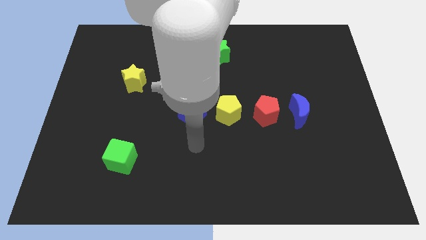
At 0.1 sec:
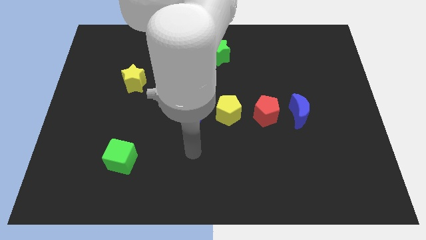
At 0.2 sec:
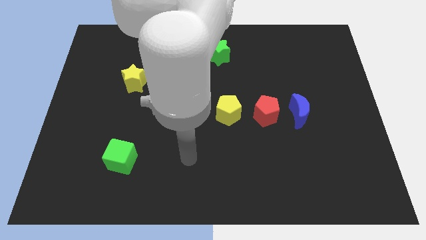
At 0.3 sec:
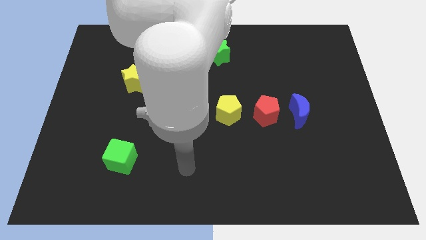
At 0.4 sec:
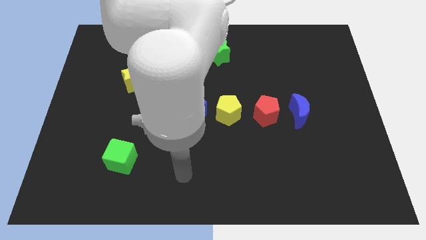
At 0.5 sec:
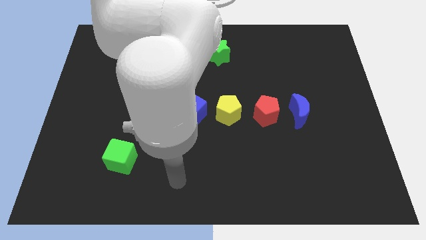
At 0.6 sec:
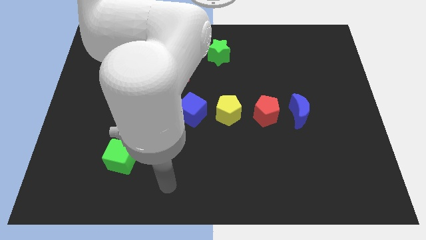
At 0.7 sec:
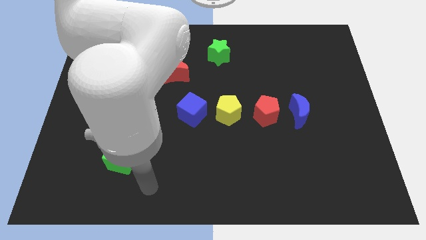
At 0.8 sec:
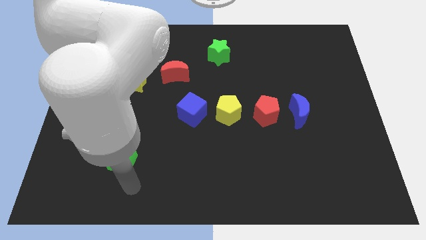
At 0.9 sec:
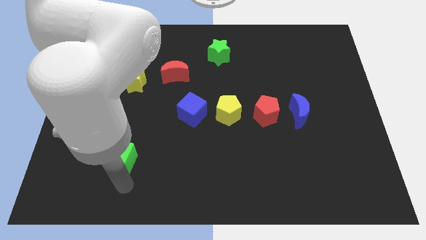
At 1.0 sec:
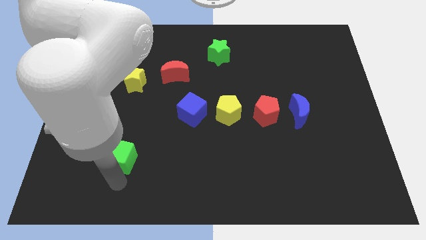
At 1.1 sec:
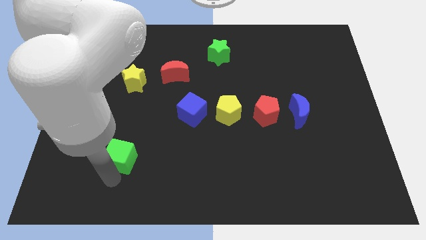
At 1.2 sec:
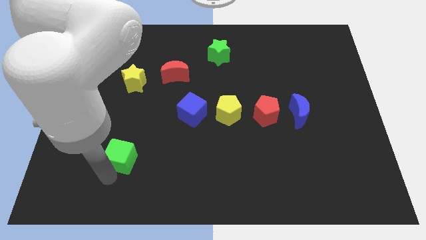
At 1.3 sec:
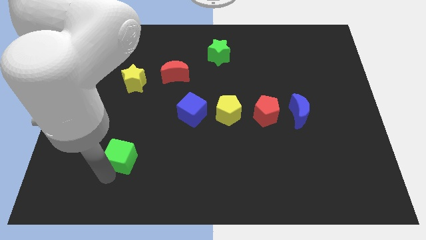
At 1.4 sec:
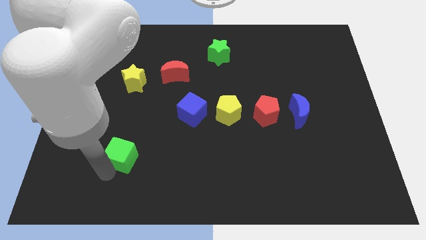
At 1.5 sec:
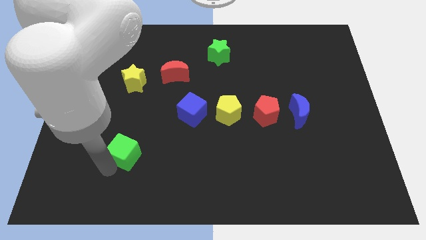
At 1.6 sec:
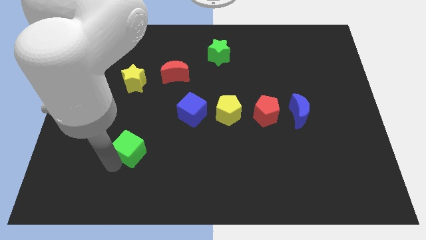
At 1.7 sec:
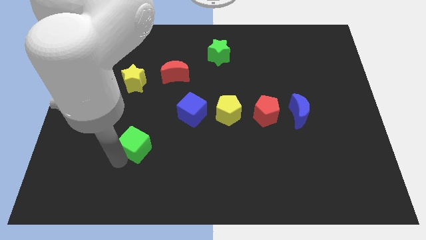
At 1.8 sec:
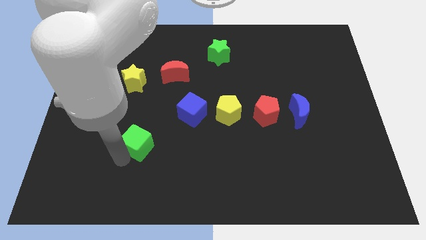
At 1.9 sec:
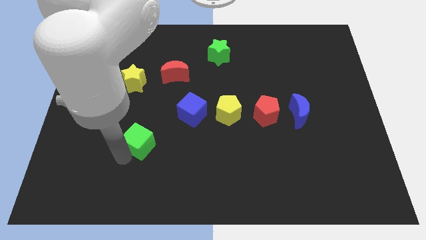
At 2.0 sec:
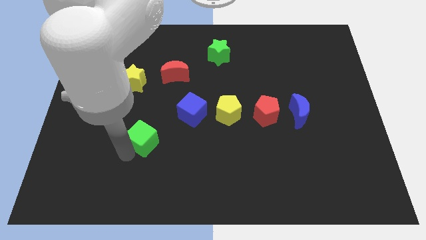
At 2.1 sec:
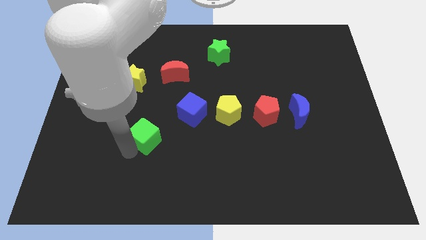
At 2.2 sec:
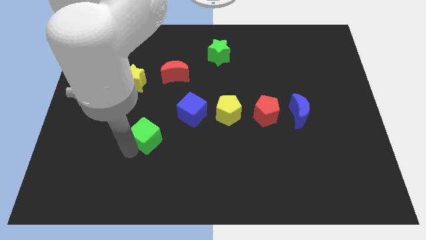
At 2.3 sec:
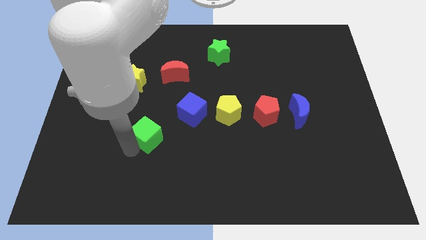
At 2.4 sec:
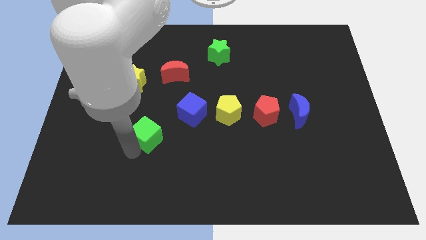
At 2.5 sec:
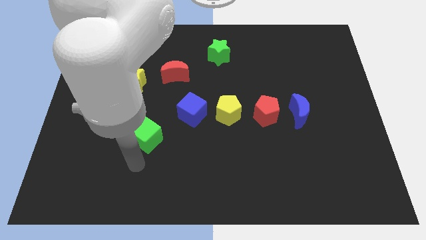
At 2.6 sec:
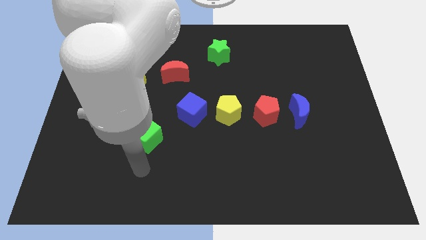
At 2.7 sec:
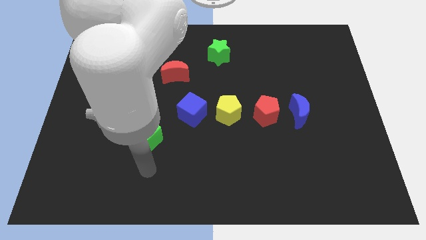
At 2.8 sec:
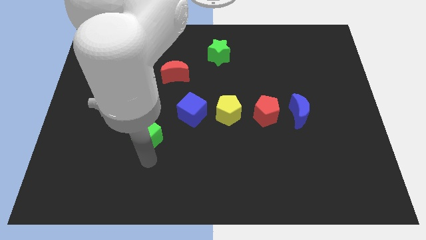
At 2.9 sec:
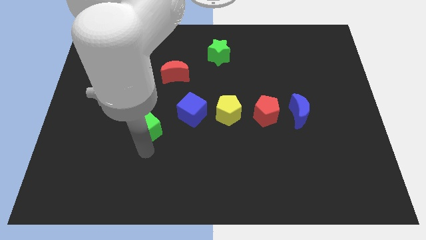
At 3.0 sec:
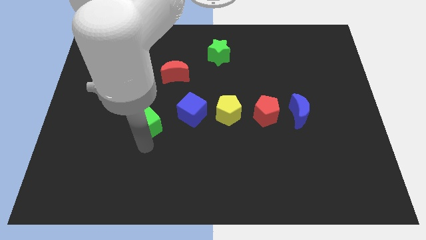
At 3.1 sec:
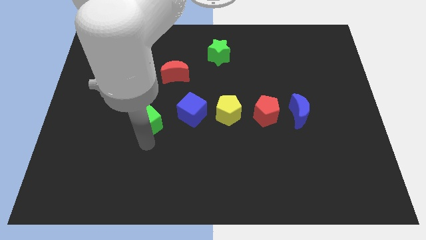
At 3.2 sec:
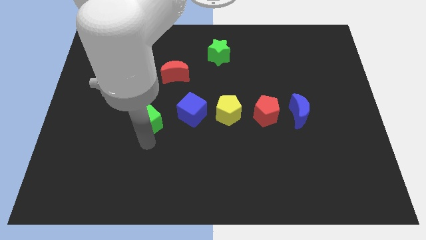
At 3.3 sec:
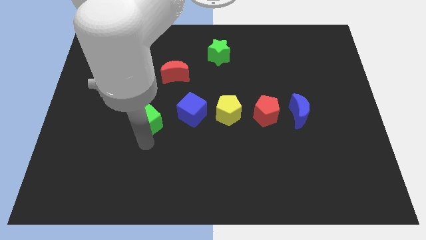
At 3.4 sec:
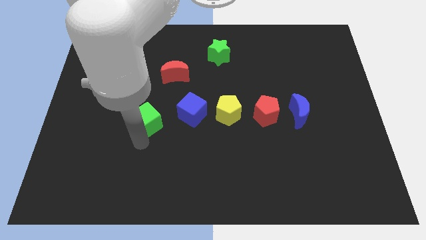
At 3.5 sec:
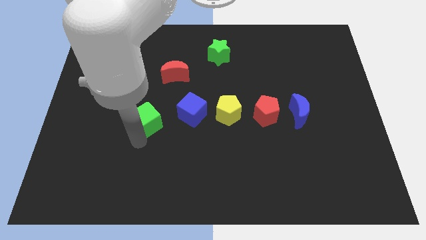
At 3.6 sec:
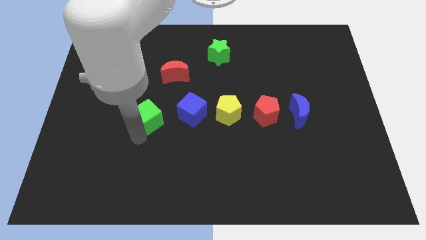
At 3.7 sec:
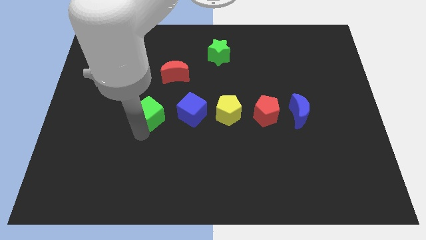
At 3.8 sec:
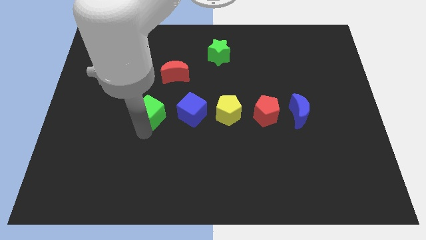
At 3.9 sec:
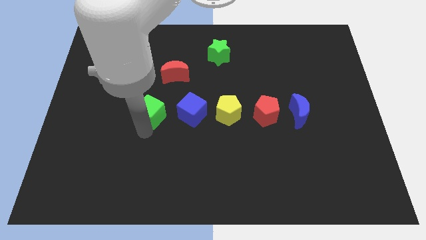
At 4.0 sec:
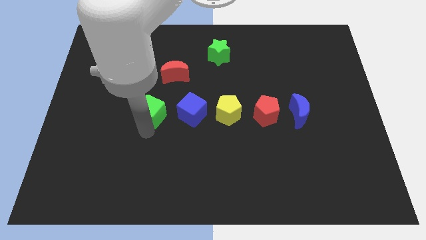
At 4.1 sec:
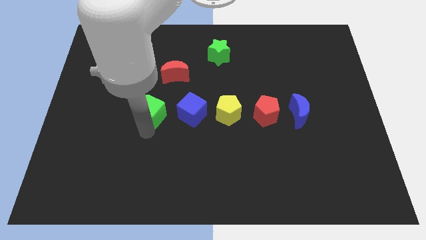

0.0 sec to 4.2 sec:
push green cube towards the blue cube

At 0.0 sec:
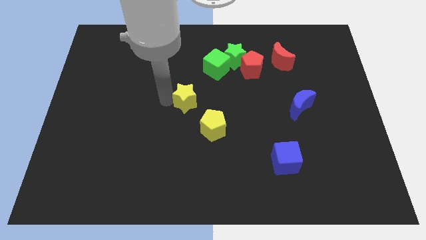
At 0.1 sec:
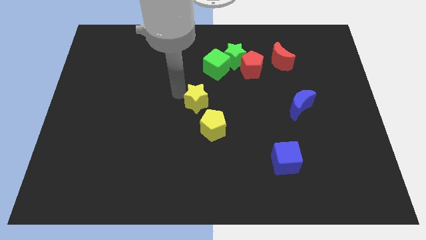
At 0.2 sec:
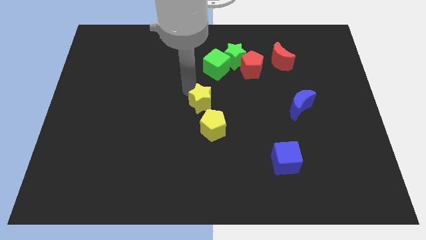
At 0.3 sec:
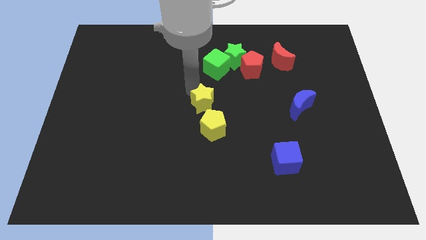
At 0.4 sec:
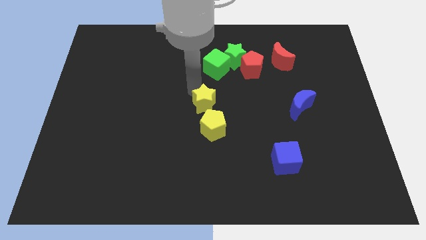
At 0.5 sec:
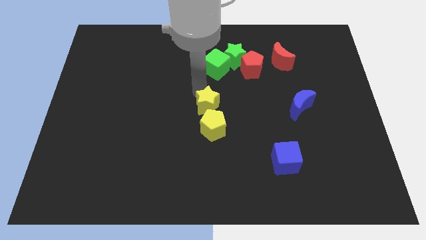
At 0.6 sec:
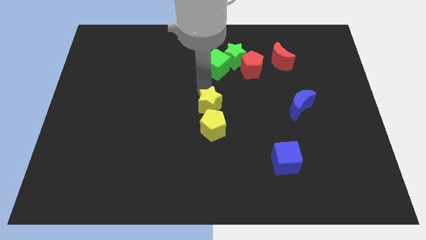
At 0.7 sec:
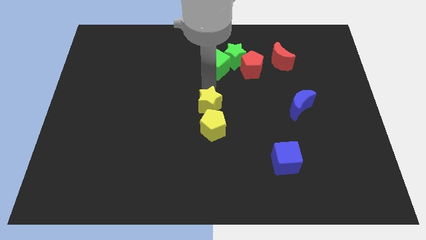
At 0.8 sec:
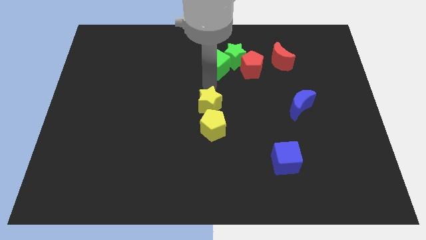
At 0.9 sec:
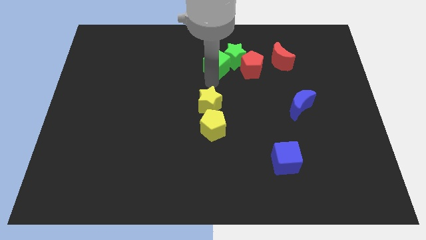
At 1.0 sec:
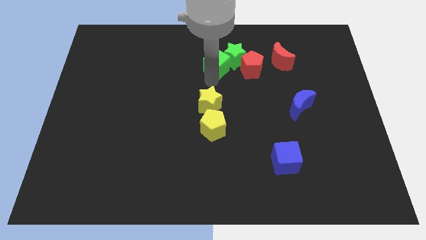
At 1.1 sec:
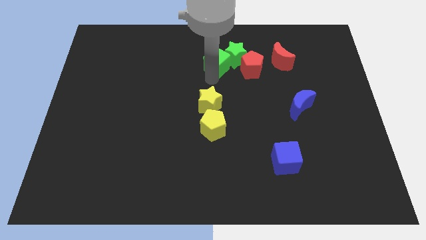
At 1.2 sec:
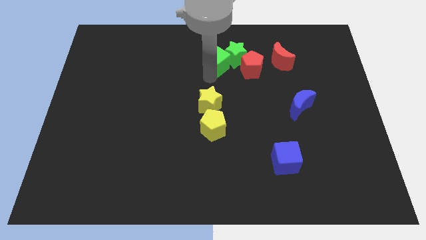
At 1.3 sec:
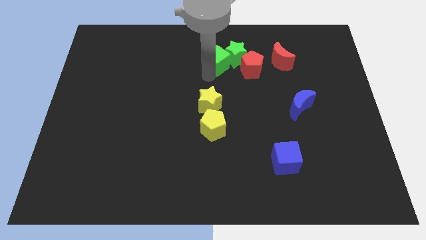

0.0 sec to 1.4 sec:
place yellow star above the yellow pentagon

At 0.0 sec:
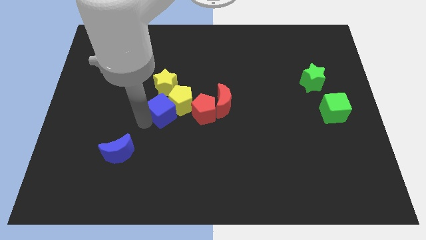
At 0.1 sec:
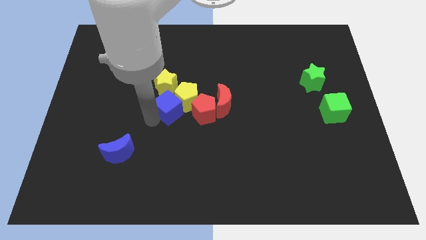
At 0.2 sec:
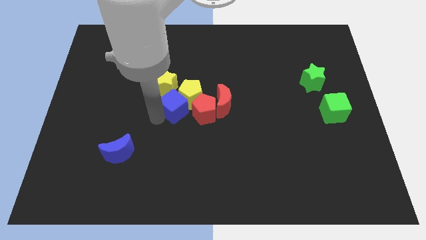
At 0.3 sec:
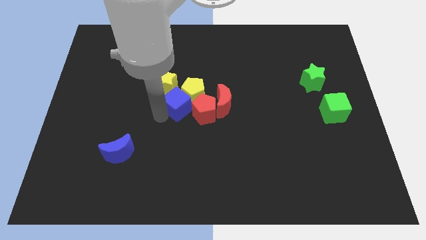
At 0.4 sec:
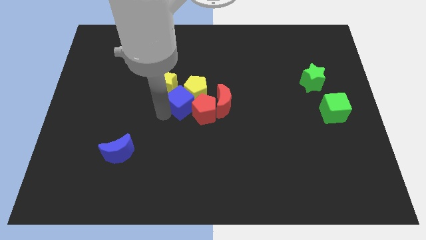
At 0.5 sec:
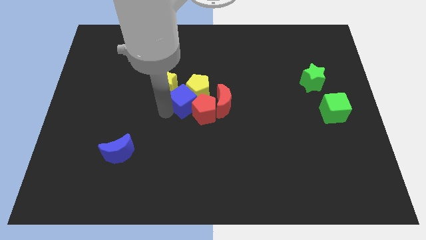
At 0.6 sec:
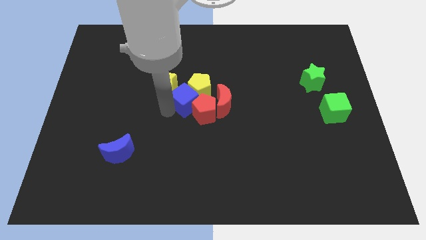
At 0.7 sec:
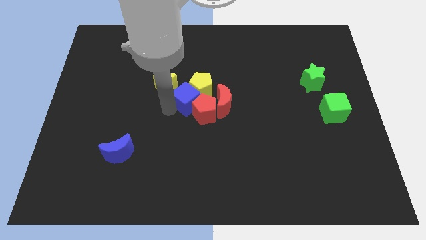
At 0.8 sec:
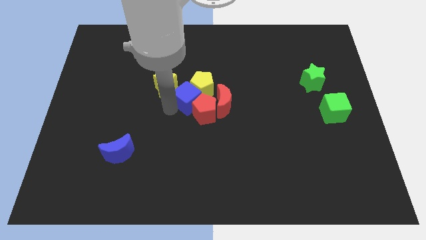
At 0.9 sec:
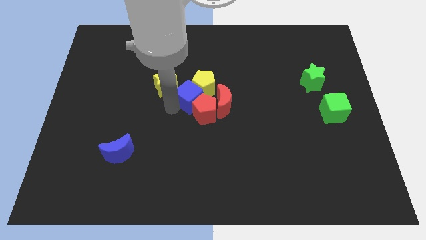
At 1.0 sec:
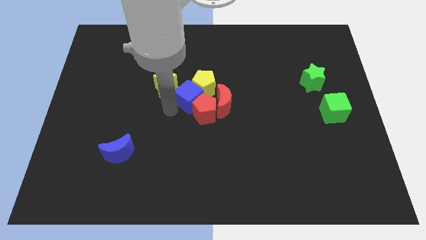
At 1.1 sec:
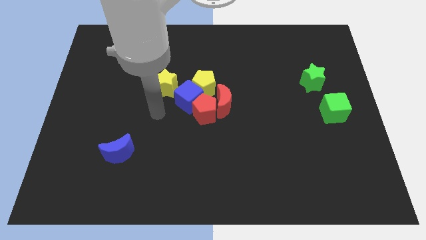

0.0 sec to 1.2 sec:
move the blue cube to the left of the red pentagon

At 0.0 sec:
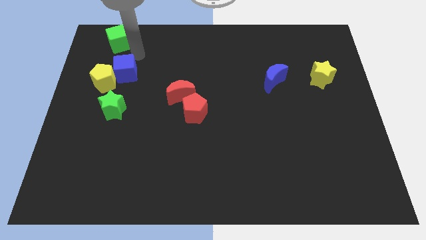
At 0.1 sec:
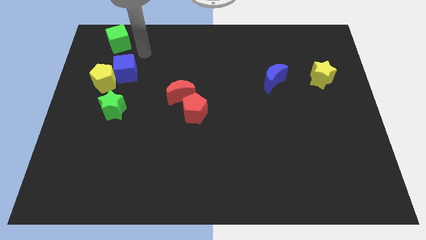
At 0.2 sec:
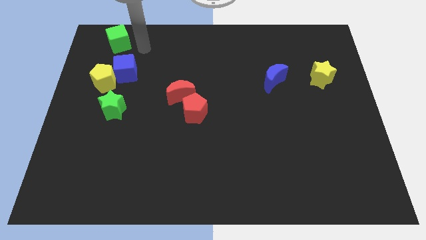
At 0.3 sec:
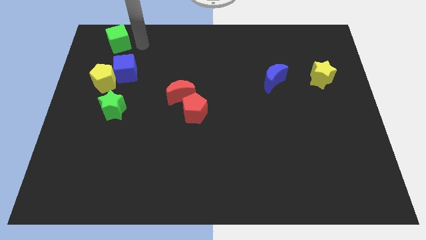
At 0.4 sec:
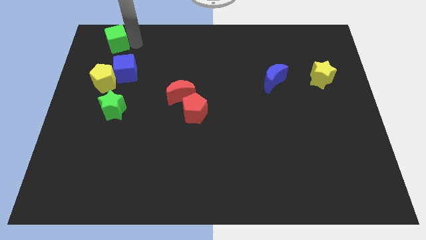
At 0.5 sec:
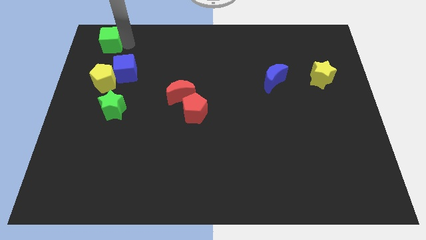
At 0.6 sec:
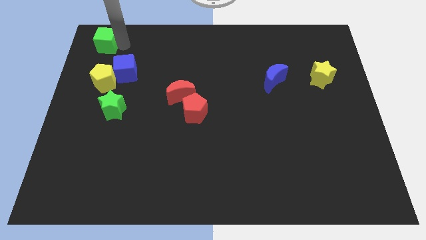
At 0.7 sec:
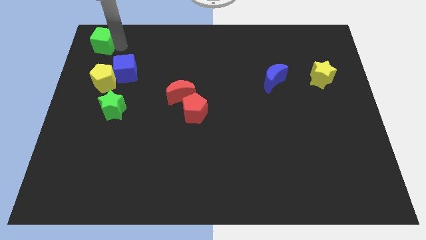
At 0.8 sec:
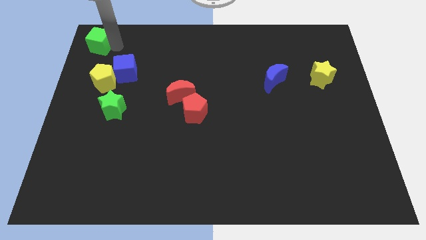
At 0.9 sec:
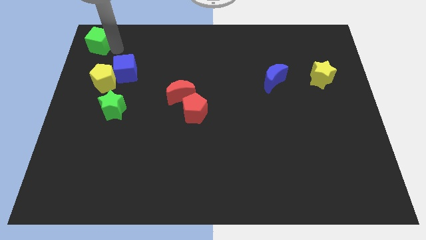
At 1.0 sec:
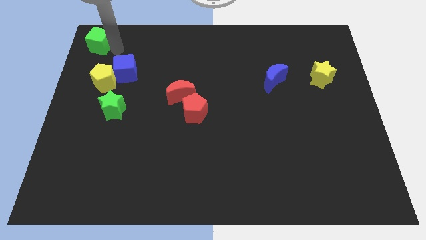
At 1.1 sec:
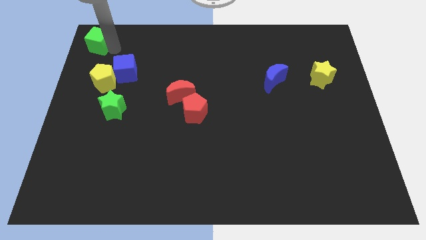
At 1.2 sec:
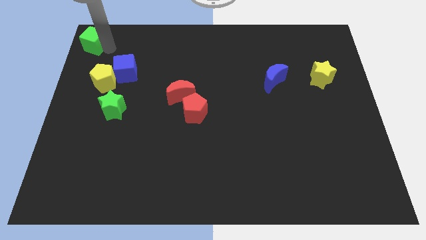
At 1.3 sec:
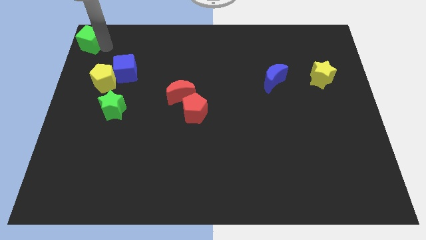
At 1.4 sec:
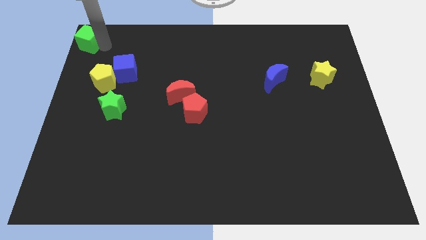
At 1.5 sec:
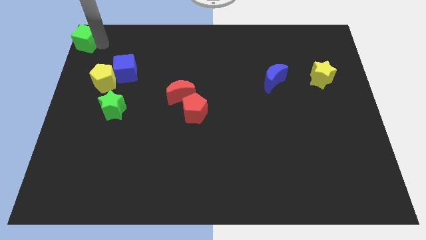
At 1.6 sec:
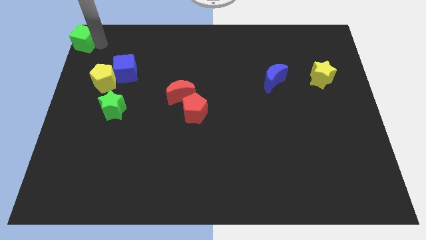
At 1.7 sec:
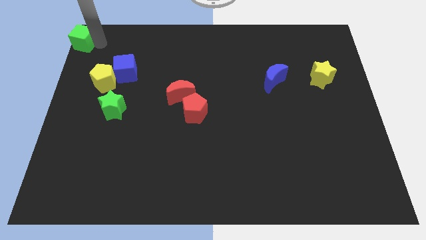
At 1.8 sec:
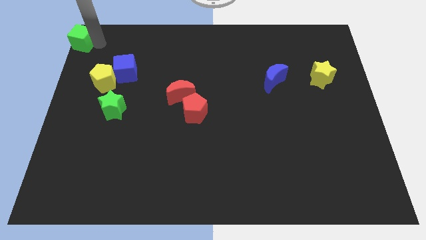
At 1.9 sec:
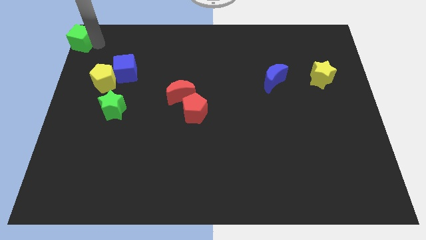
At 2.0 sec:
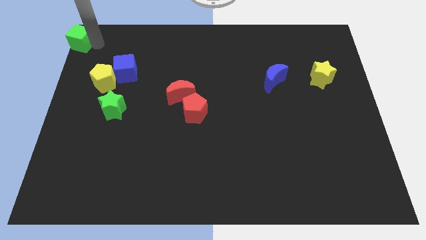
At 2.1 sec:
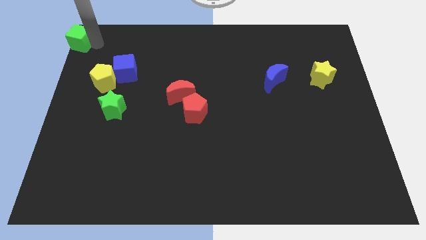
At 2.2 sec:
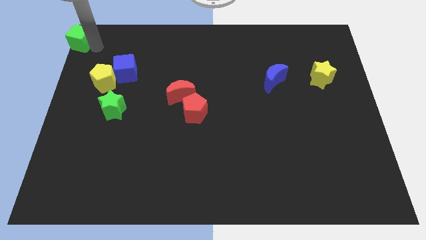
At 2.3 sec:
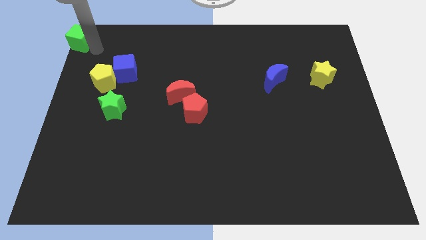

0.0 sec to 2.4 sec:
place the green cube to the top left corner
